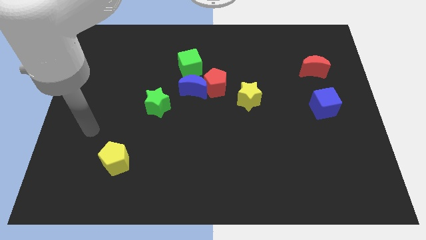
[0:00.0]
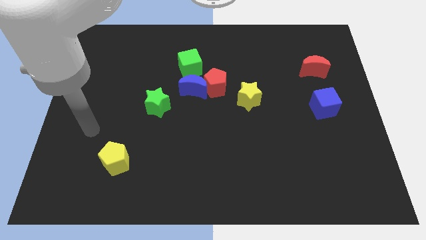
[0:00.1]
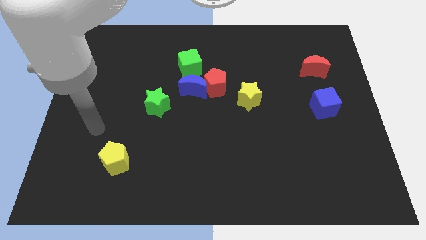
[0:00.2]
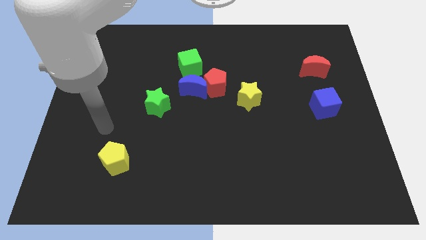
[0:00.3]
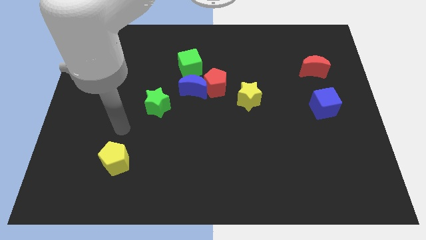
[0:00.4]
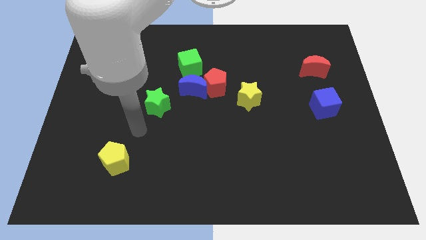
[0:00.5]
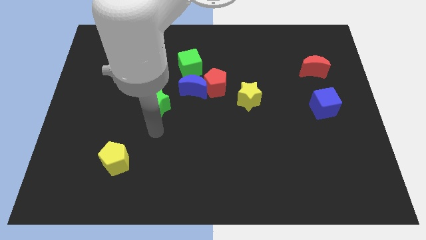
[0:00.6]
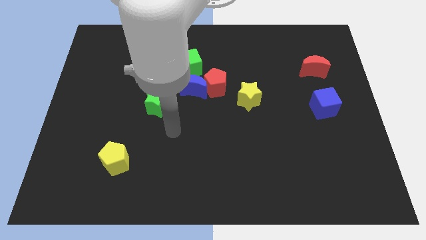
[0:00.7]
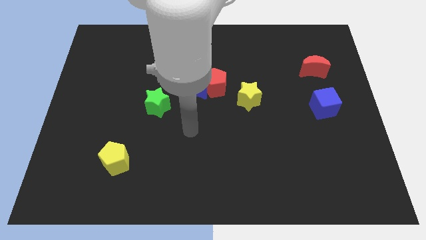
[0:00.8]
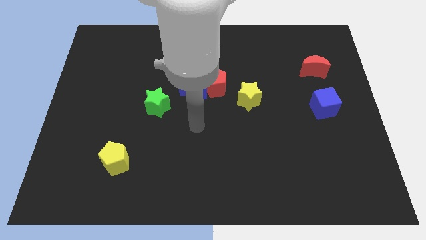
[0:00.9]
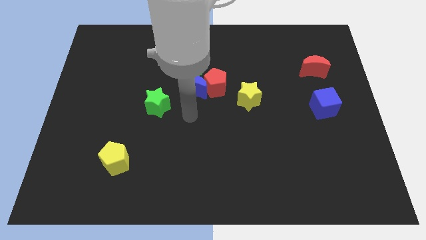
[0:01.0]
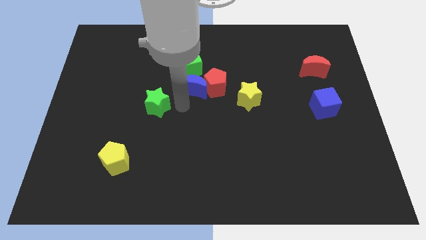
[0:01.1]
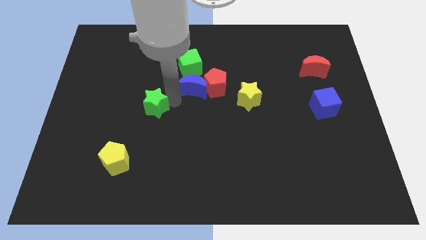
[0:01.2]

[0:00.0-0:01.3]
place your hand at right side of the green star

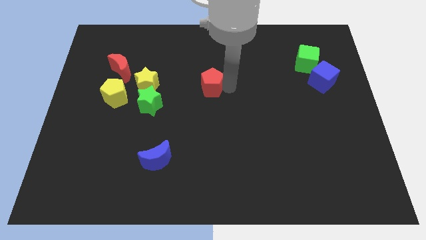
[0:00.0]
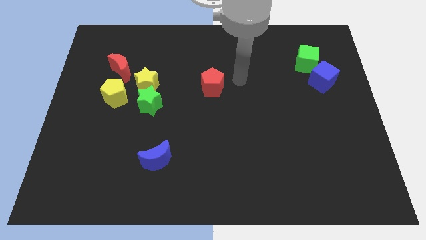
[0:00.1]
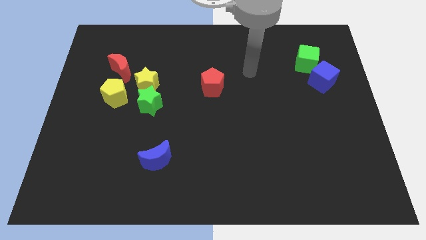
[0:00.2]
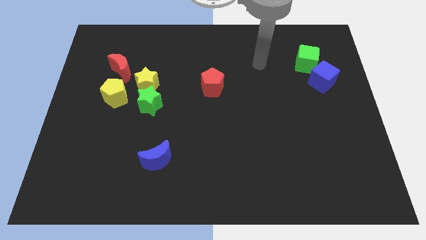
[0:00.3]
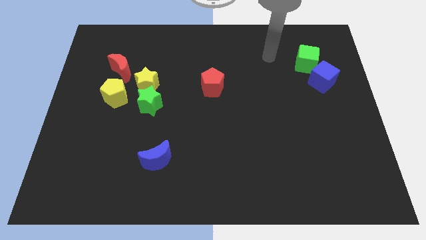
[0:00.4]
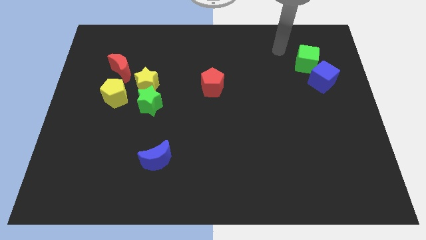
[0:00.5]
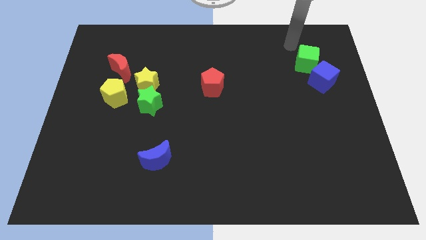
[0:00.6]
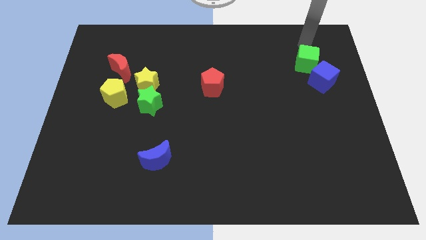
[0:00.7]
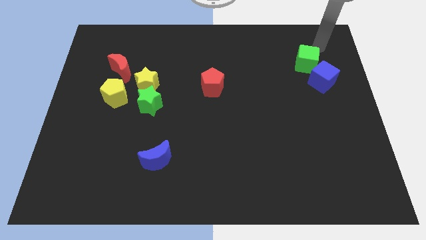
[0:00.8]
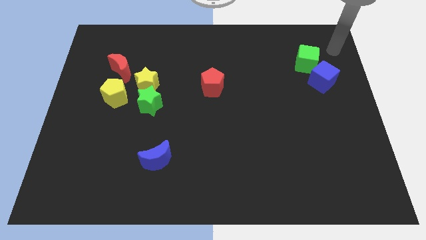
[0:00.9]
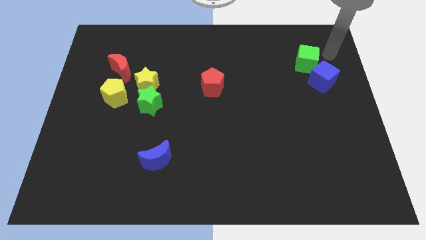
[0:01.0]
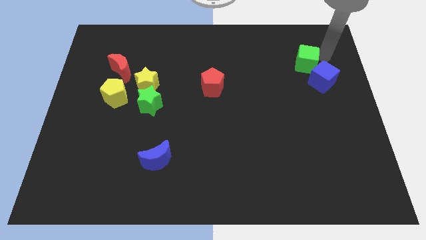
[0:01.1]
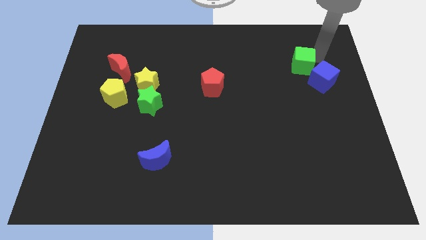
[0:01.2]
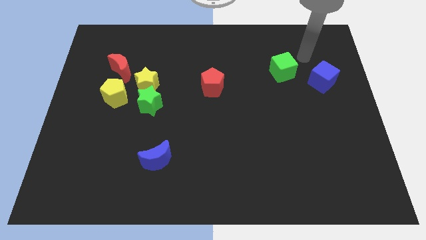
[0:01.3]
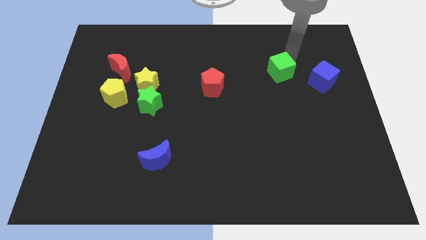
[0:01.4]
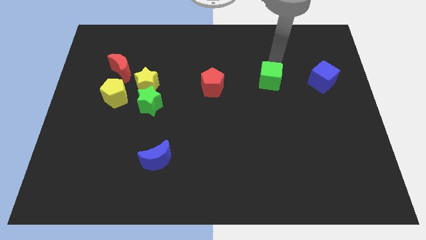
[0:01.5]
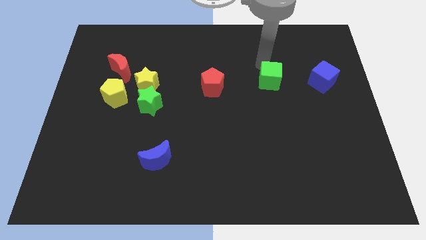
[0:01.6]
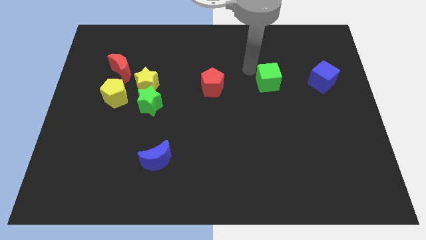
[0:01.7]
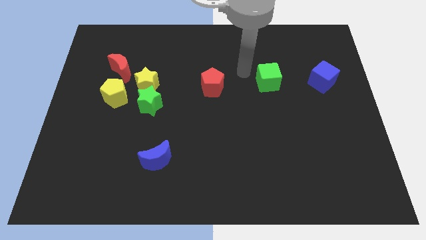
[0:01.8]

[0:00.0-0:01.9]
place green cube in between the blue cube and red pentagon

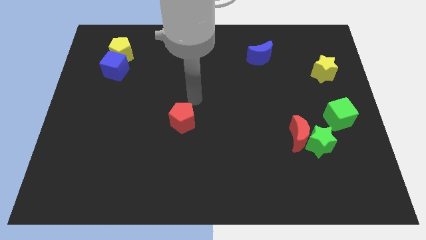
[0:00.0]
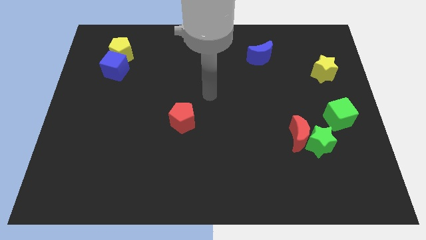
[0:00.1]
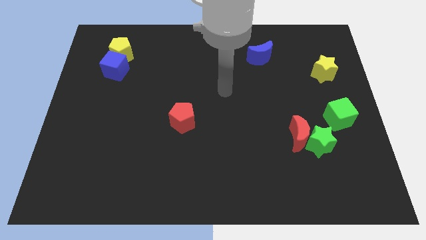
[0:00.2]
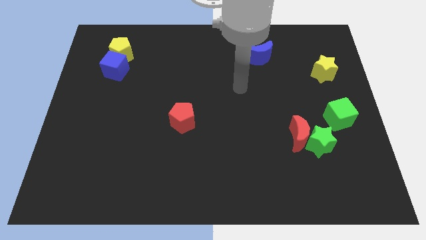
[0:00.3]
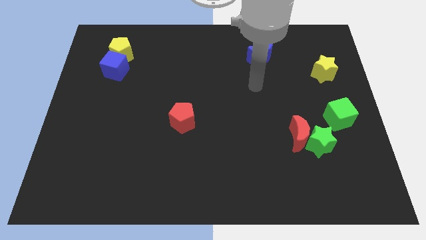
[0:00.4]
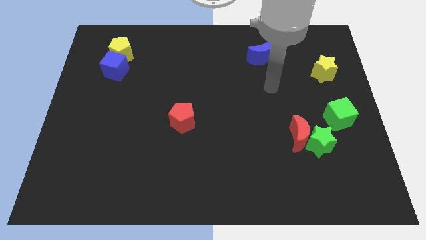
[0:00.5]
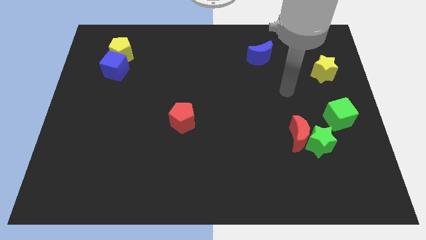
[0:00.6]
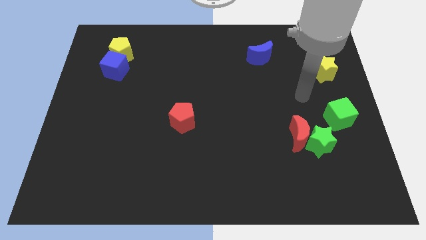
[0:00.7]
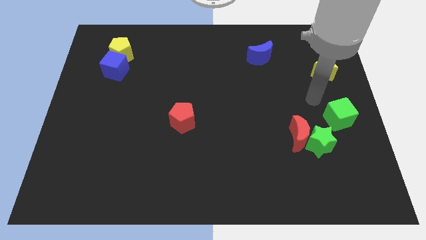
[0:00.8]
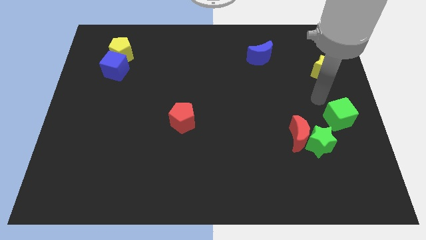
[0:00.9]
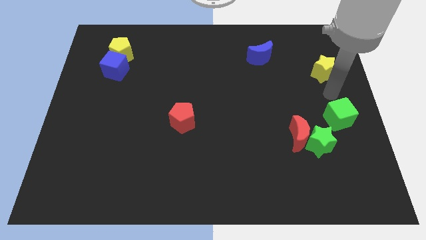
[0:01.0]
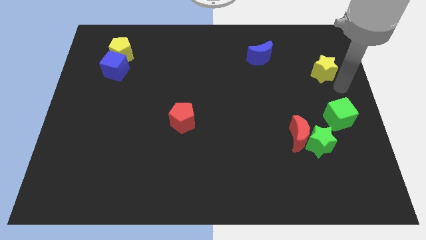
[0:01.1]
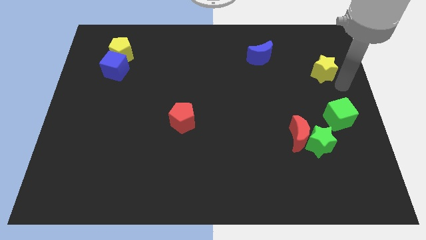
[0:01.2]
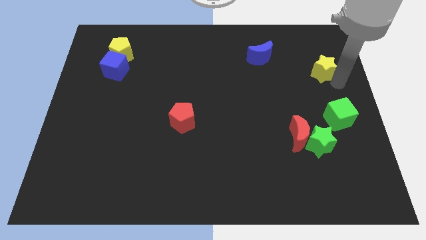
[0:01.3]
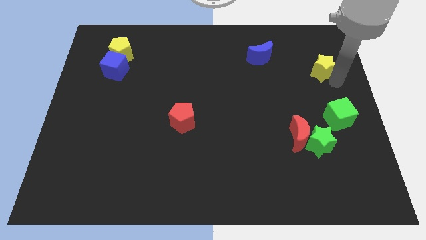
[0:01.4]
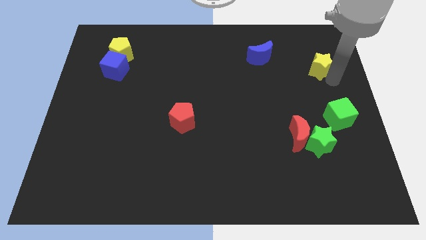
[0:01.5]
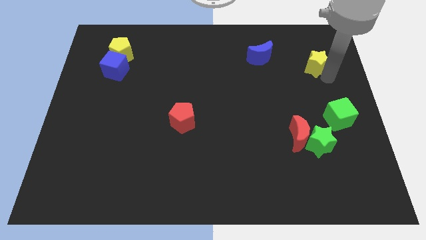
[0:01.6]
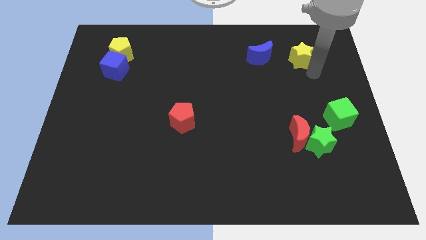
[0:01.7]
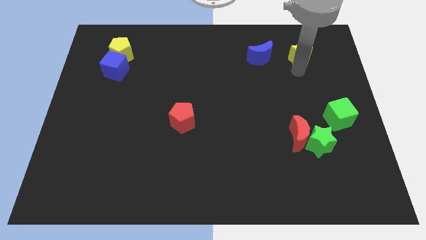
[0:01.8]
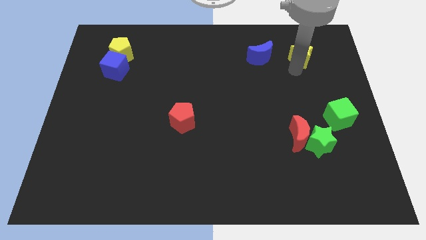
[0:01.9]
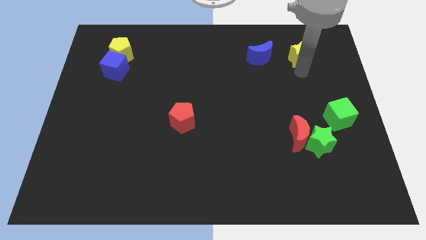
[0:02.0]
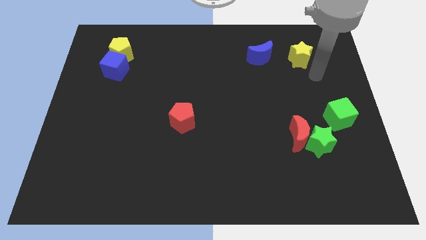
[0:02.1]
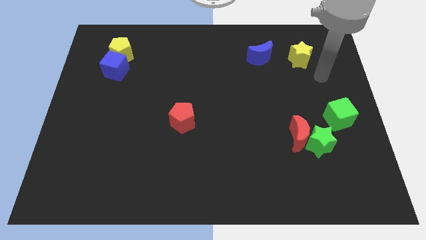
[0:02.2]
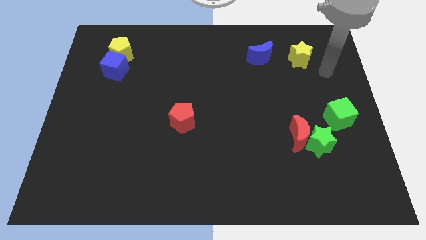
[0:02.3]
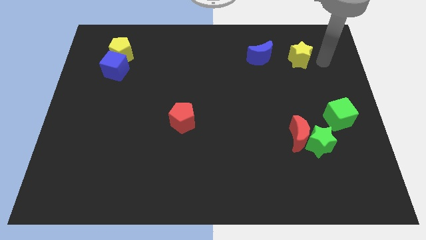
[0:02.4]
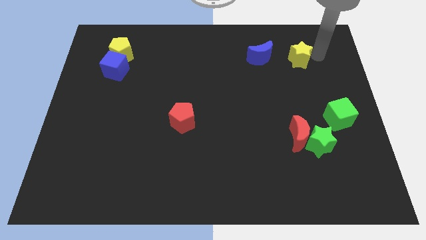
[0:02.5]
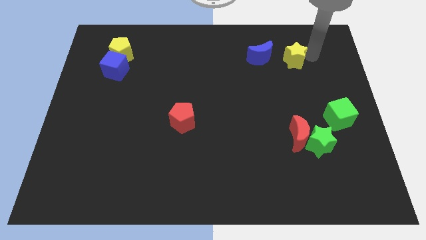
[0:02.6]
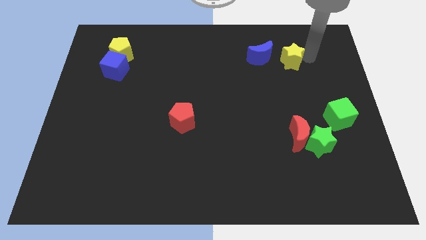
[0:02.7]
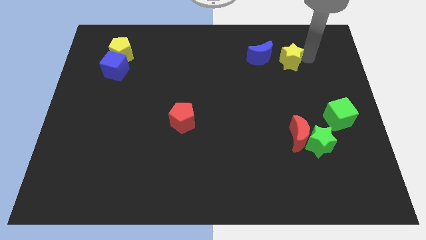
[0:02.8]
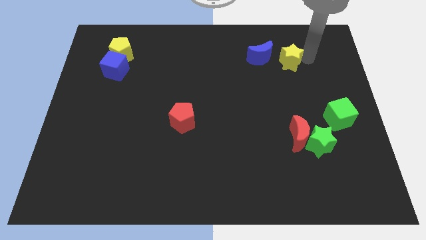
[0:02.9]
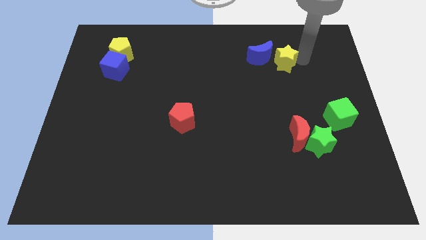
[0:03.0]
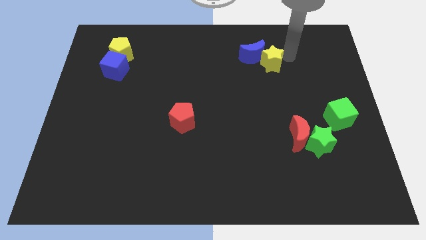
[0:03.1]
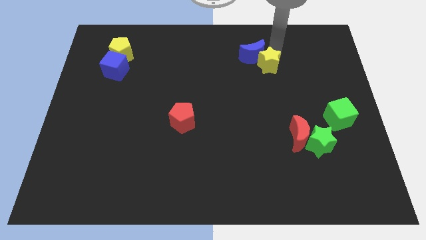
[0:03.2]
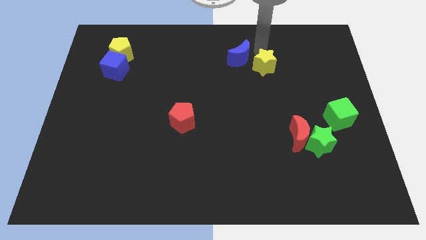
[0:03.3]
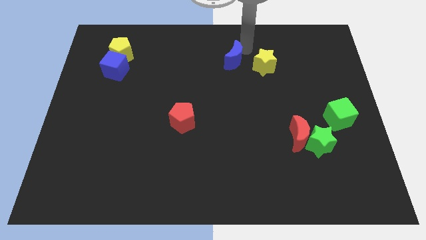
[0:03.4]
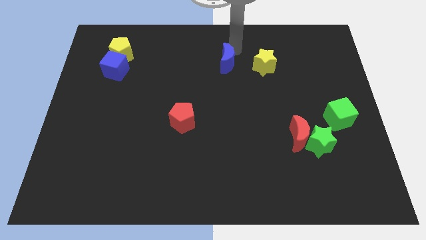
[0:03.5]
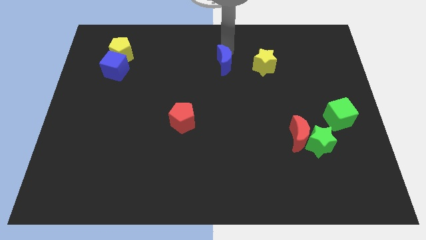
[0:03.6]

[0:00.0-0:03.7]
slide the yellow star parallel right to the blue moon

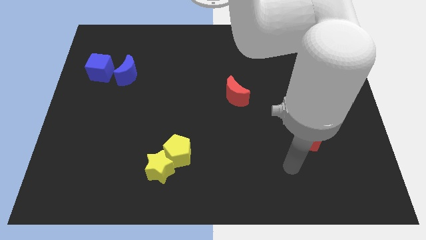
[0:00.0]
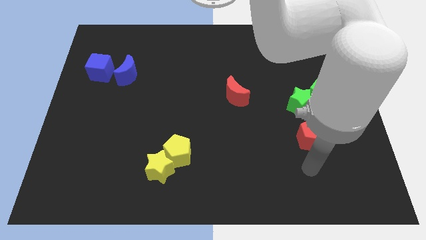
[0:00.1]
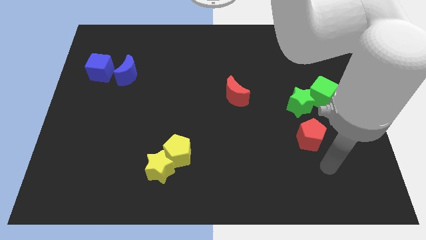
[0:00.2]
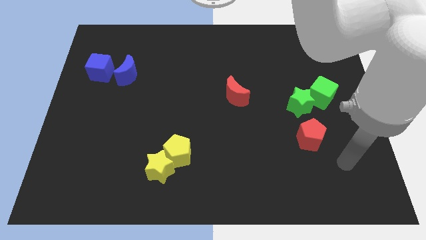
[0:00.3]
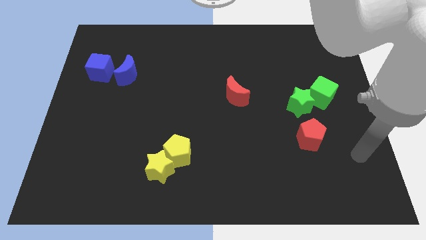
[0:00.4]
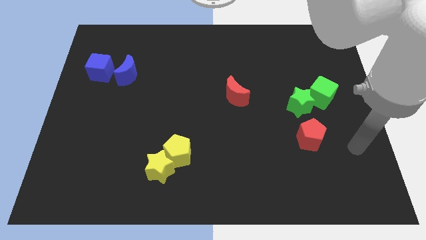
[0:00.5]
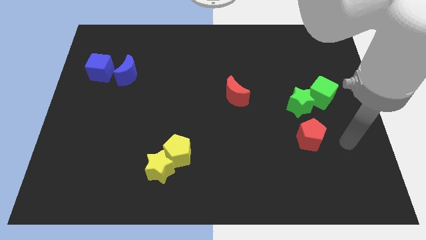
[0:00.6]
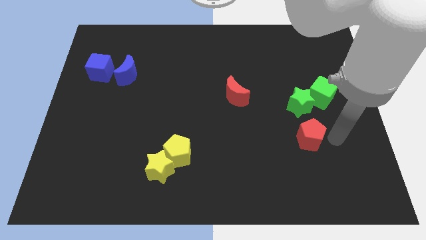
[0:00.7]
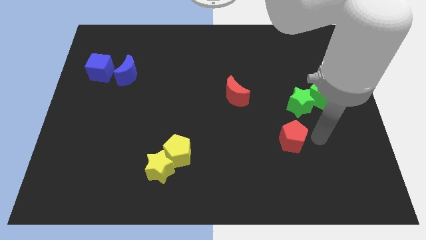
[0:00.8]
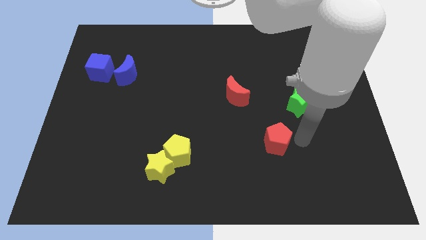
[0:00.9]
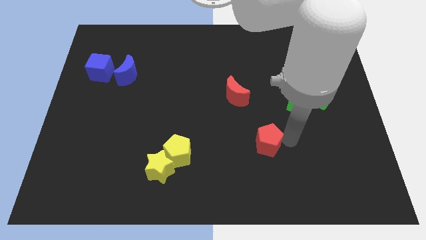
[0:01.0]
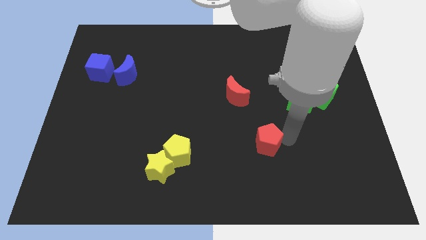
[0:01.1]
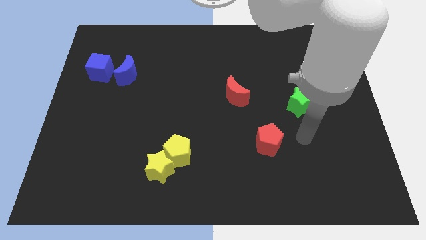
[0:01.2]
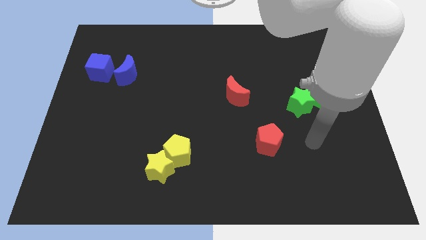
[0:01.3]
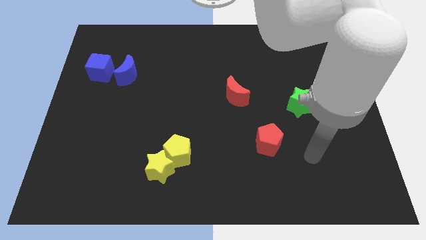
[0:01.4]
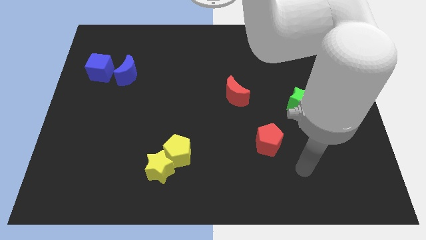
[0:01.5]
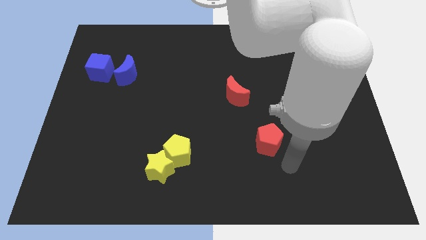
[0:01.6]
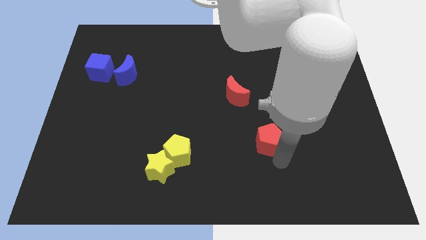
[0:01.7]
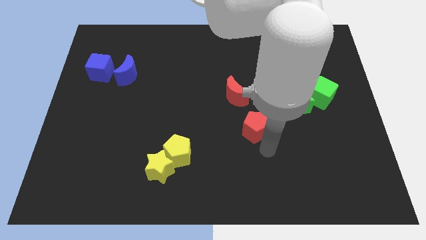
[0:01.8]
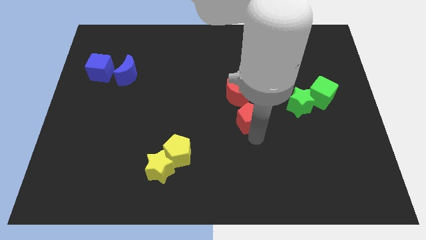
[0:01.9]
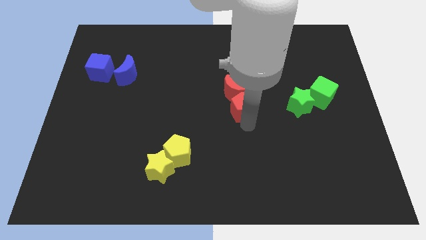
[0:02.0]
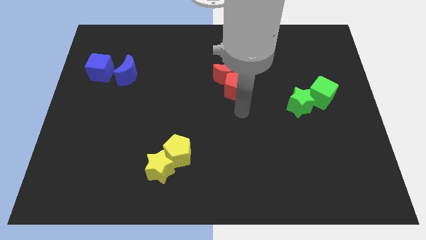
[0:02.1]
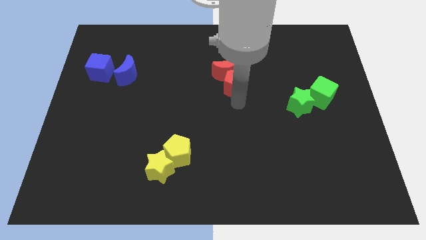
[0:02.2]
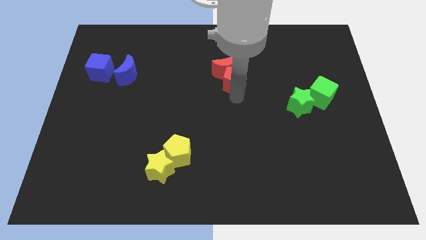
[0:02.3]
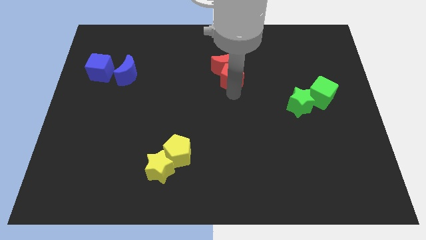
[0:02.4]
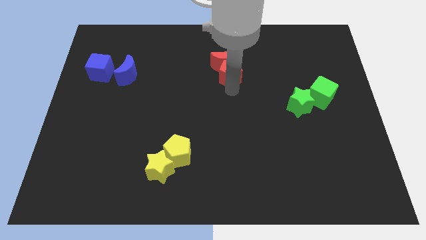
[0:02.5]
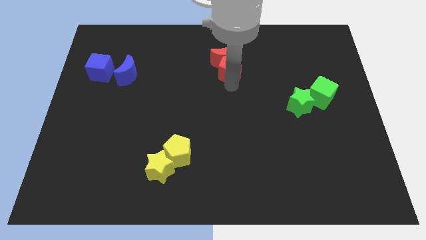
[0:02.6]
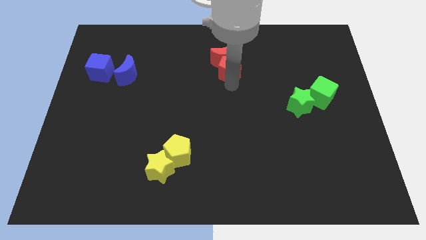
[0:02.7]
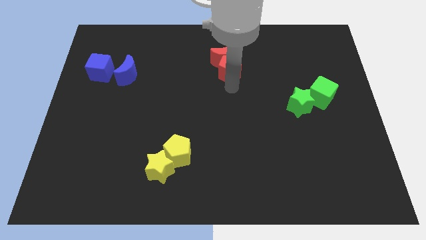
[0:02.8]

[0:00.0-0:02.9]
move the red crescent along with the red pentagon to the top center of the board
